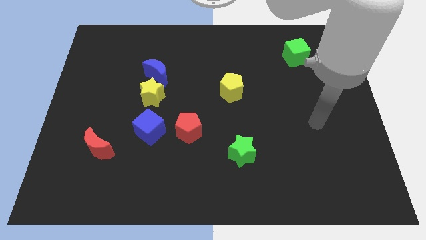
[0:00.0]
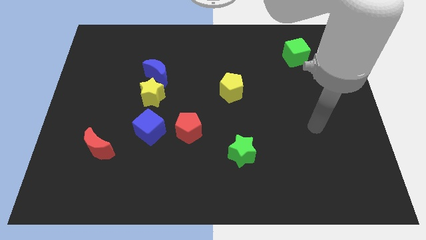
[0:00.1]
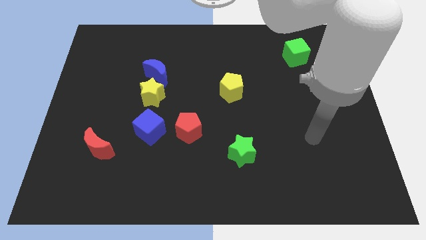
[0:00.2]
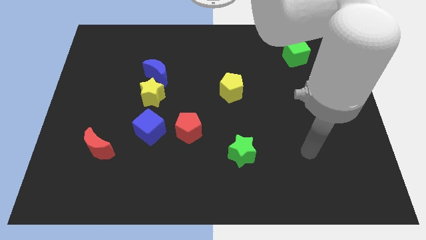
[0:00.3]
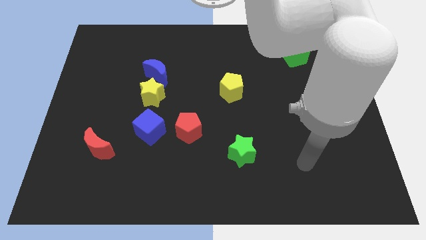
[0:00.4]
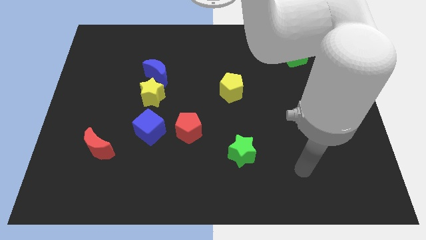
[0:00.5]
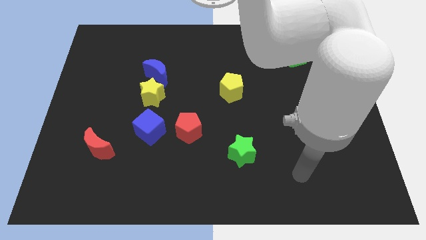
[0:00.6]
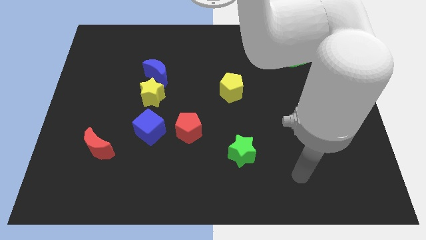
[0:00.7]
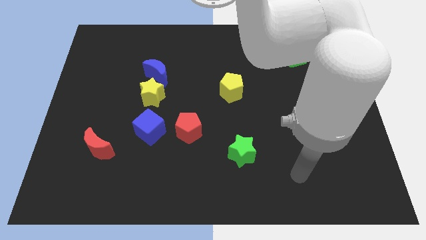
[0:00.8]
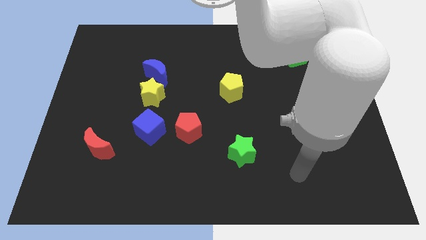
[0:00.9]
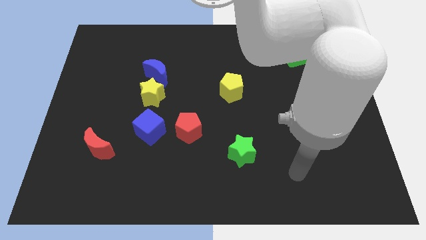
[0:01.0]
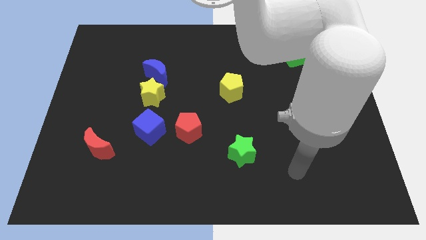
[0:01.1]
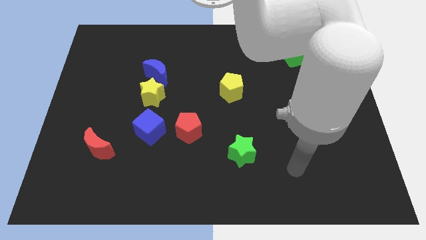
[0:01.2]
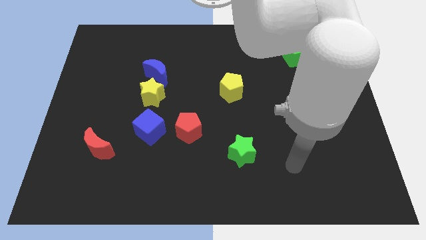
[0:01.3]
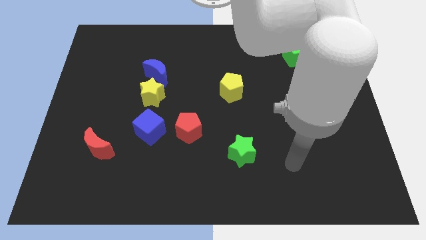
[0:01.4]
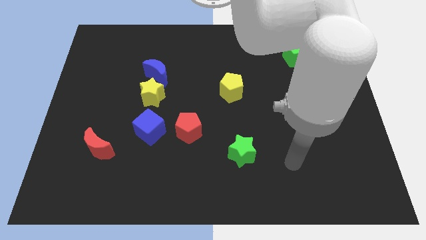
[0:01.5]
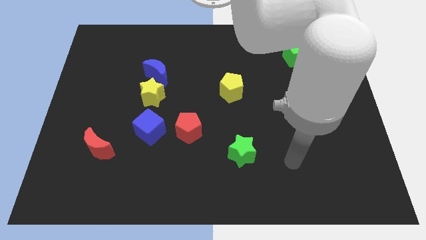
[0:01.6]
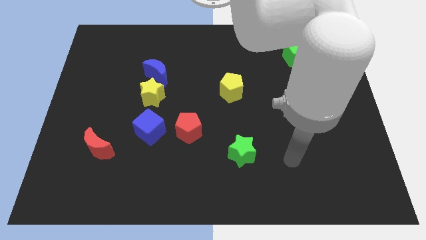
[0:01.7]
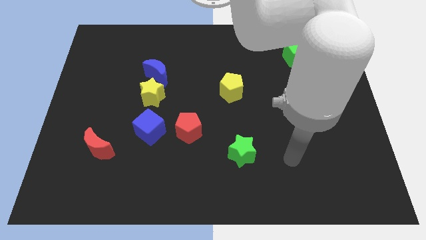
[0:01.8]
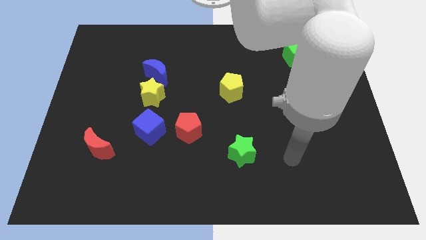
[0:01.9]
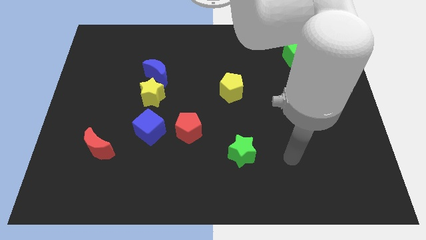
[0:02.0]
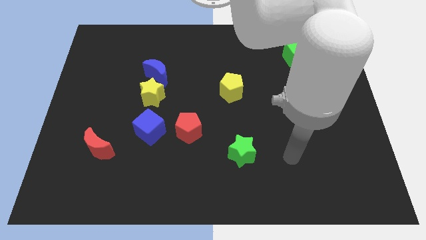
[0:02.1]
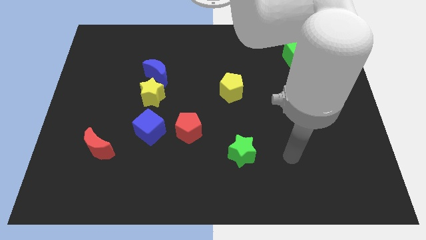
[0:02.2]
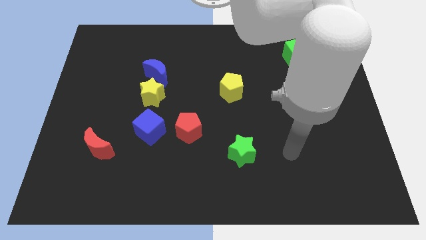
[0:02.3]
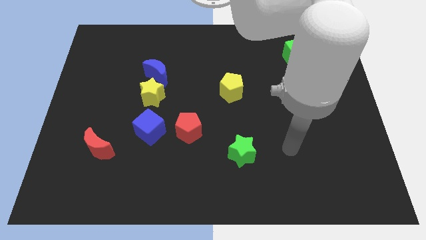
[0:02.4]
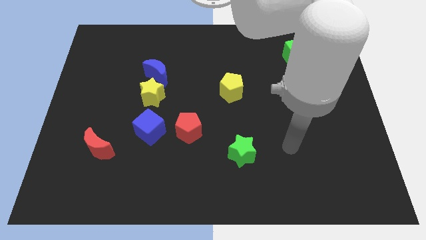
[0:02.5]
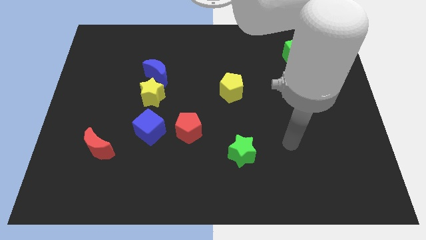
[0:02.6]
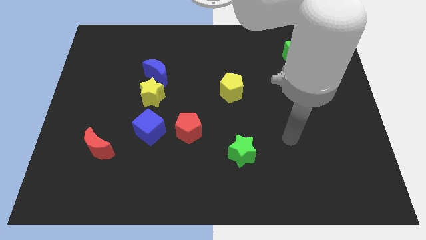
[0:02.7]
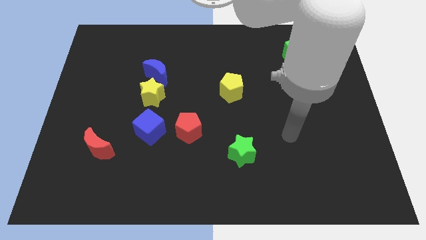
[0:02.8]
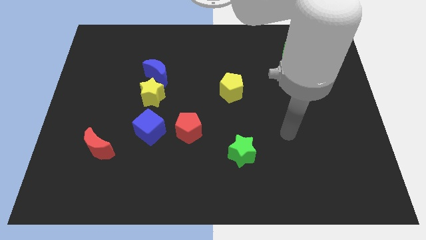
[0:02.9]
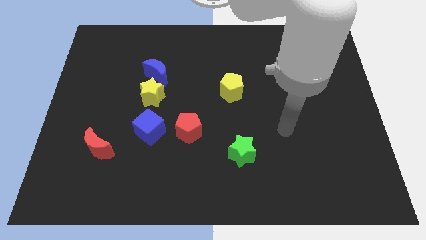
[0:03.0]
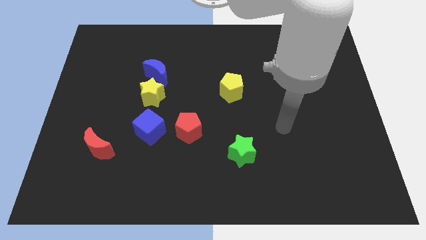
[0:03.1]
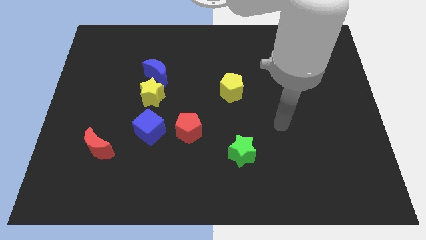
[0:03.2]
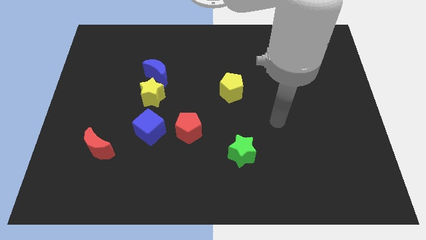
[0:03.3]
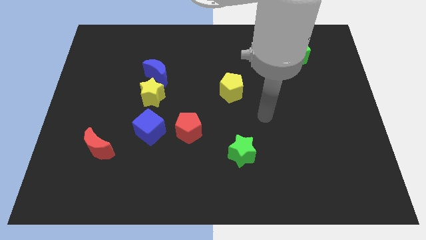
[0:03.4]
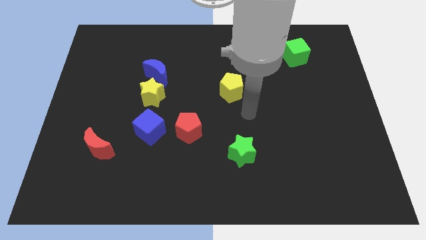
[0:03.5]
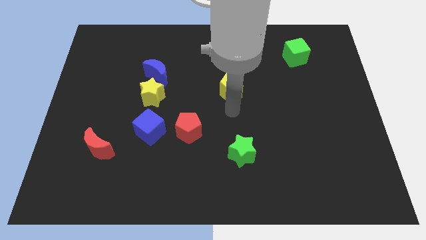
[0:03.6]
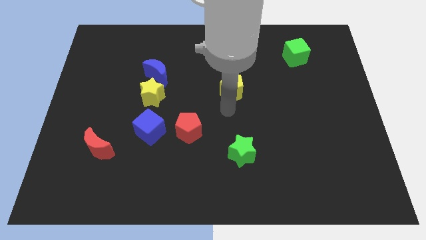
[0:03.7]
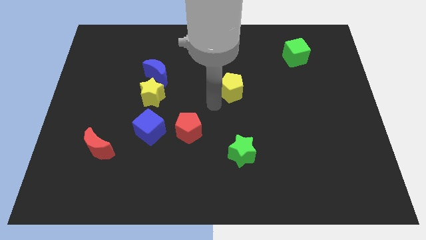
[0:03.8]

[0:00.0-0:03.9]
move the arm towards the yellow pentagon

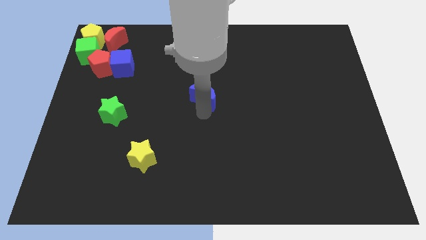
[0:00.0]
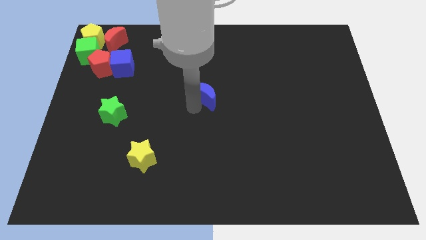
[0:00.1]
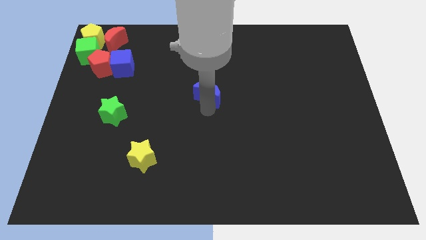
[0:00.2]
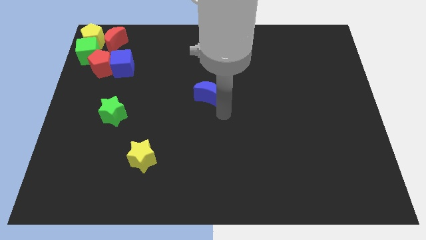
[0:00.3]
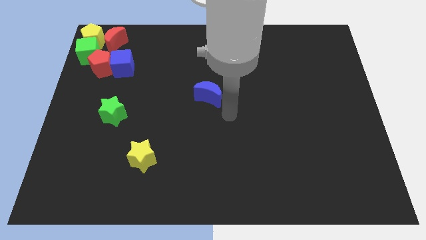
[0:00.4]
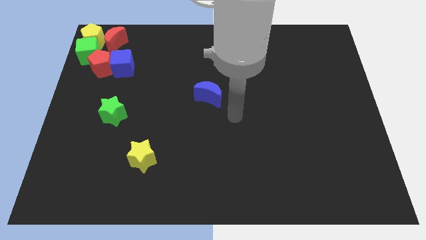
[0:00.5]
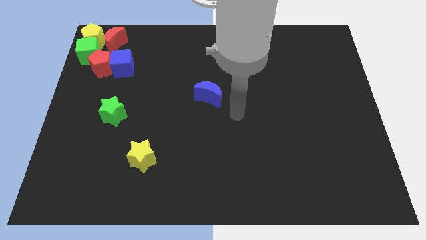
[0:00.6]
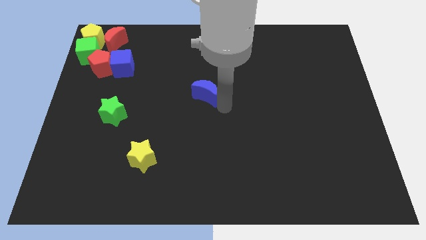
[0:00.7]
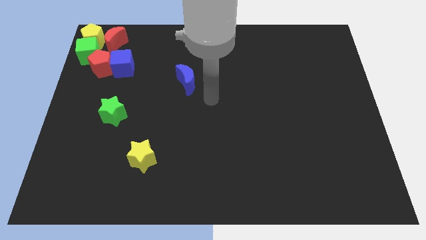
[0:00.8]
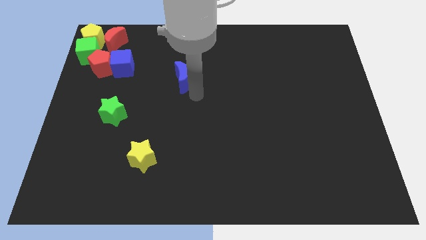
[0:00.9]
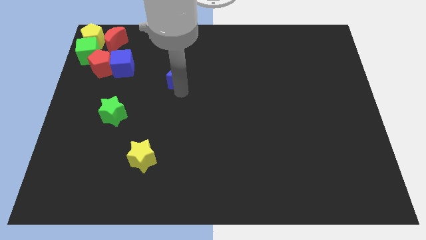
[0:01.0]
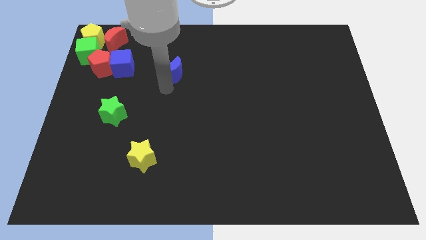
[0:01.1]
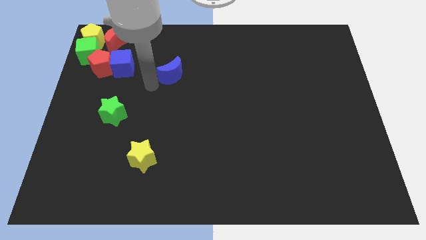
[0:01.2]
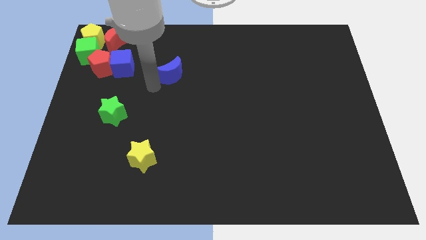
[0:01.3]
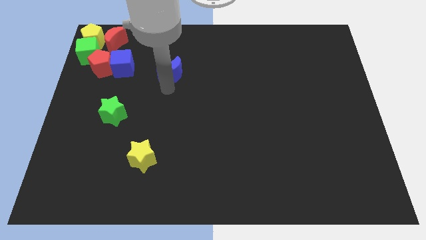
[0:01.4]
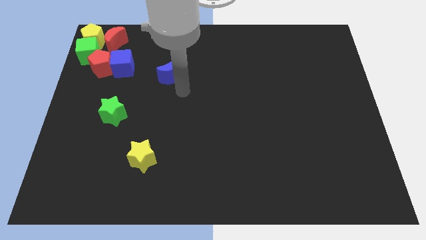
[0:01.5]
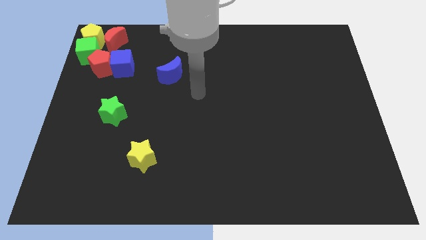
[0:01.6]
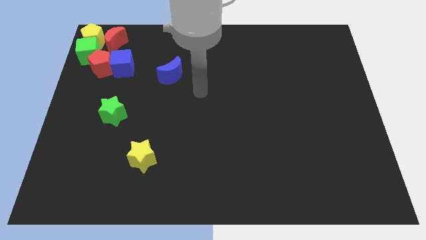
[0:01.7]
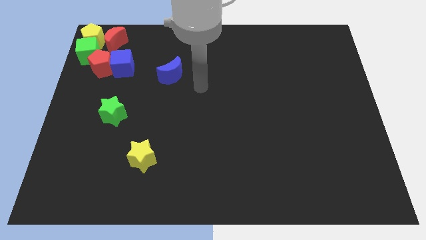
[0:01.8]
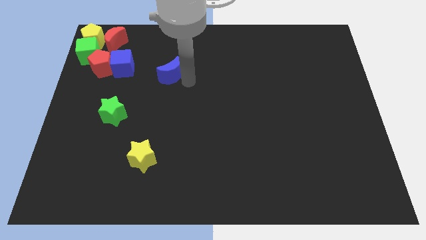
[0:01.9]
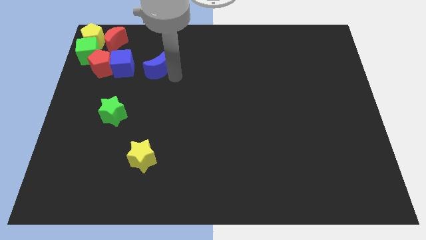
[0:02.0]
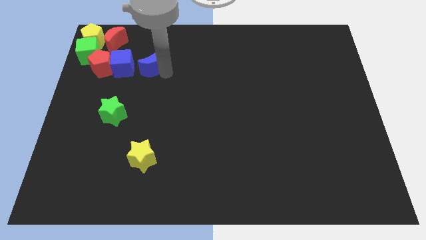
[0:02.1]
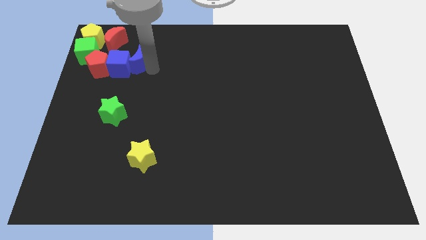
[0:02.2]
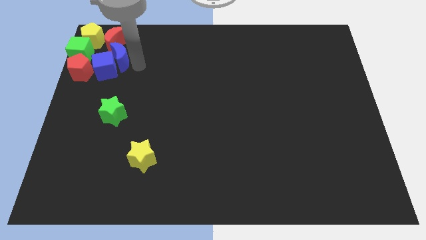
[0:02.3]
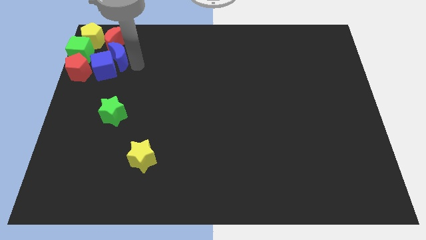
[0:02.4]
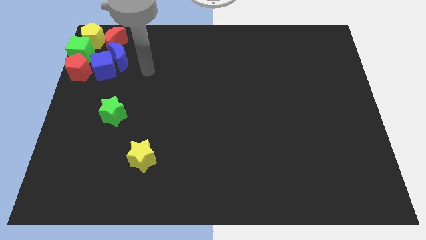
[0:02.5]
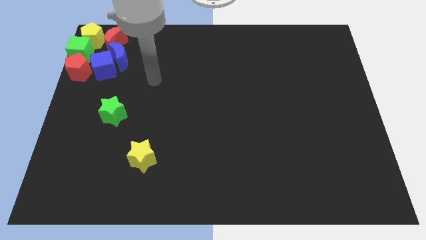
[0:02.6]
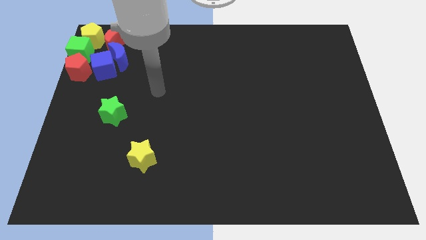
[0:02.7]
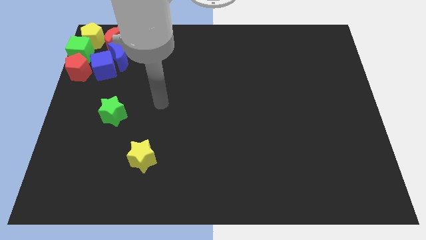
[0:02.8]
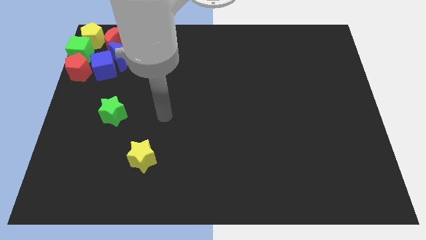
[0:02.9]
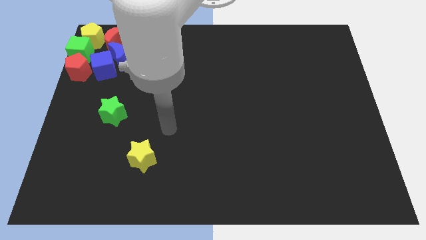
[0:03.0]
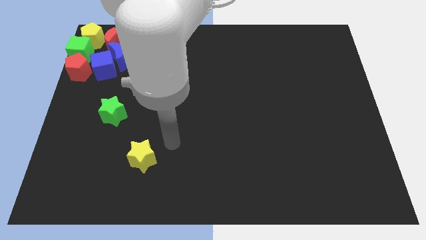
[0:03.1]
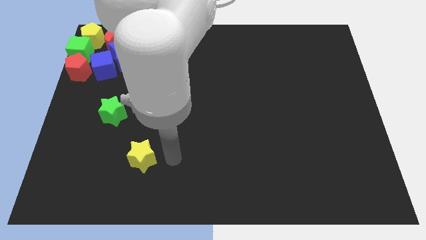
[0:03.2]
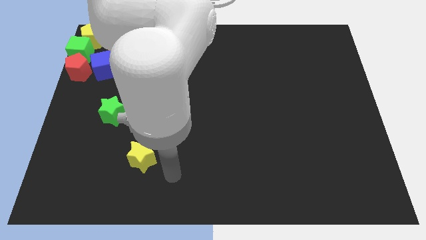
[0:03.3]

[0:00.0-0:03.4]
move the blue crescent to the group of blocks

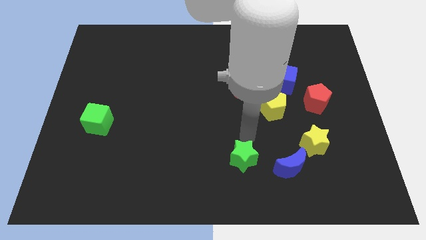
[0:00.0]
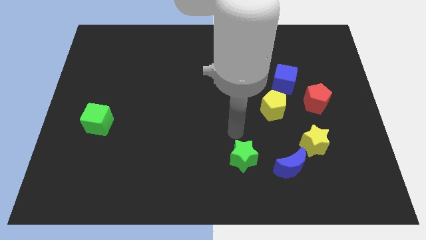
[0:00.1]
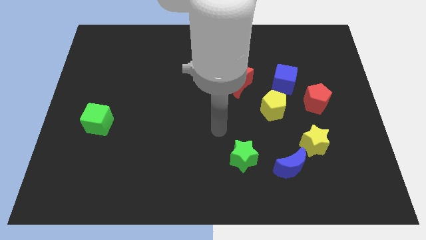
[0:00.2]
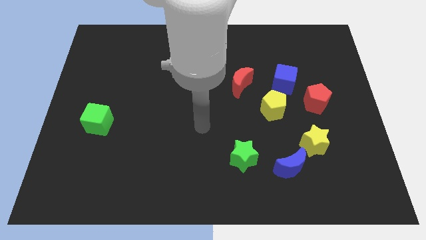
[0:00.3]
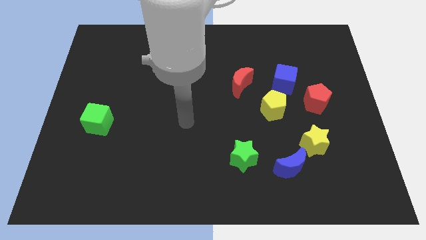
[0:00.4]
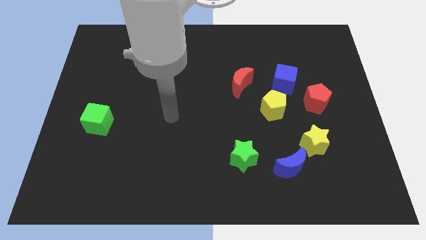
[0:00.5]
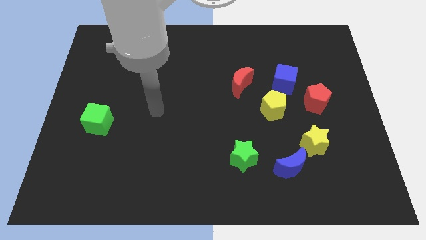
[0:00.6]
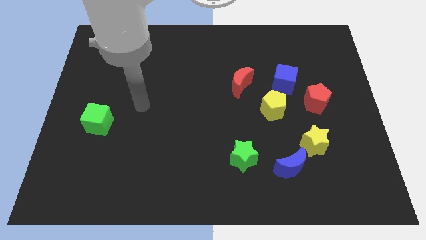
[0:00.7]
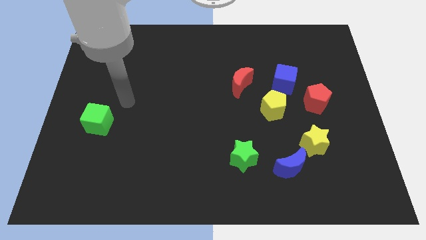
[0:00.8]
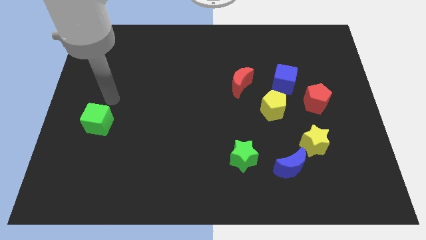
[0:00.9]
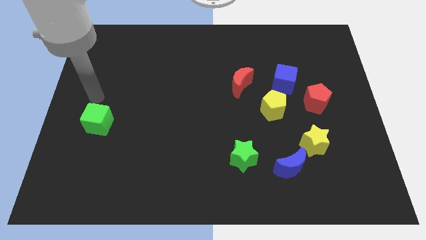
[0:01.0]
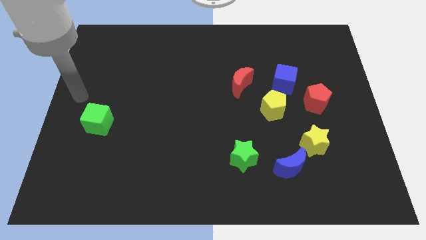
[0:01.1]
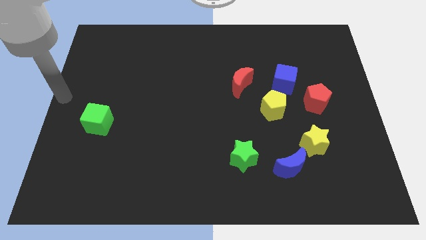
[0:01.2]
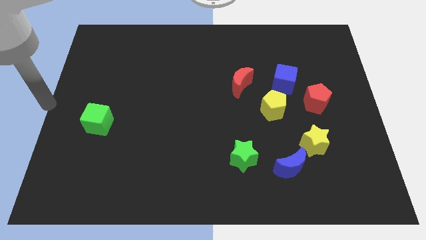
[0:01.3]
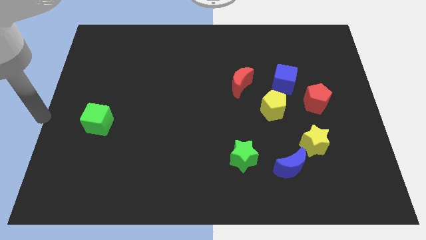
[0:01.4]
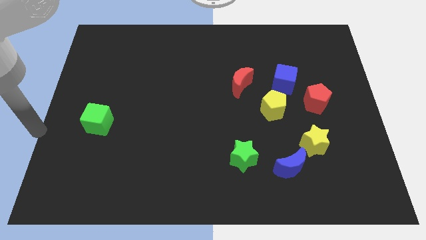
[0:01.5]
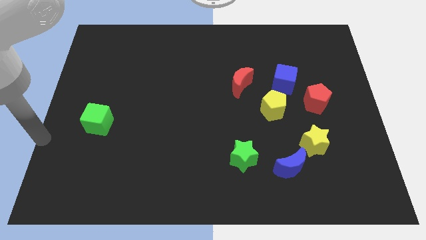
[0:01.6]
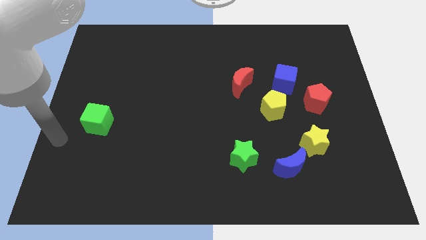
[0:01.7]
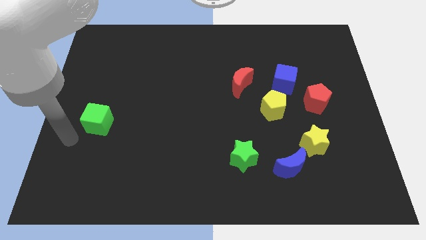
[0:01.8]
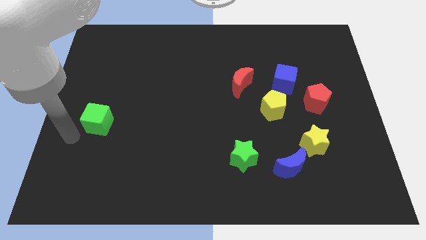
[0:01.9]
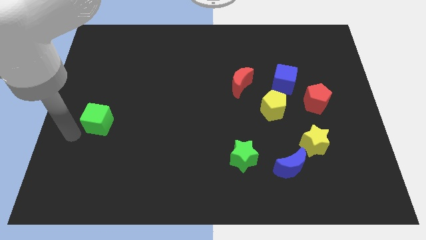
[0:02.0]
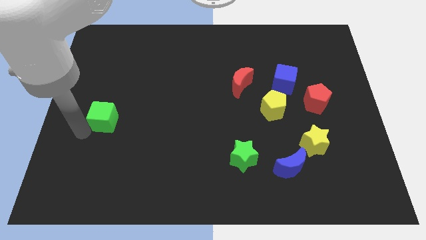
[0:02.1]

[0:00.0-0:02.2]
push the green cube slightly to the center
